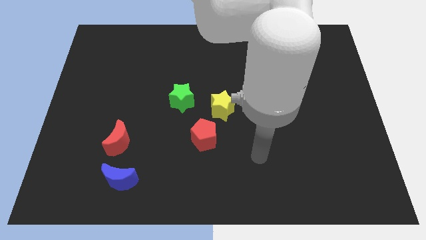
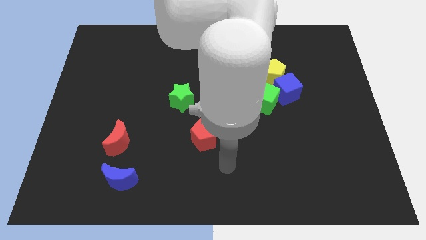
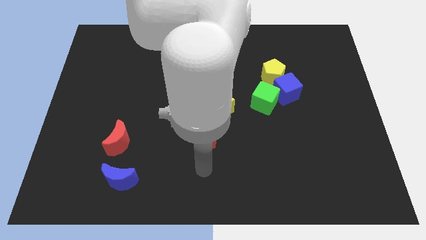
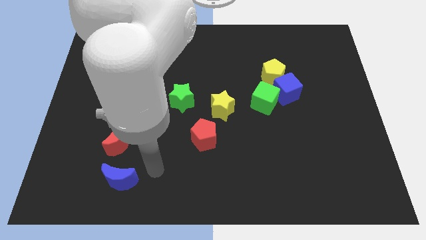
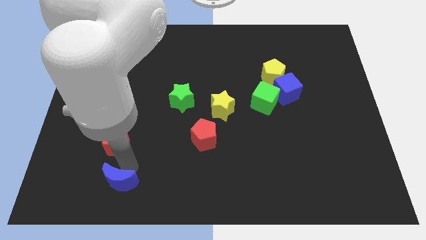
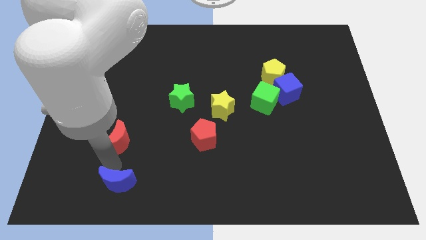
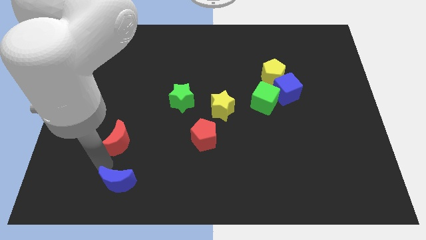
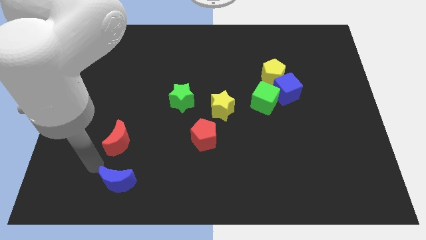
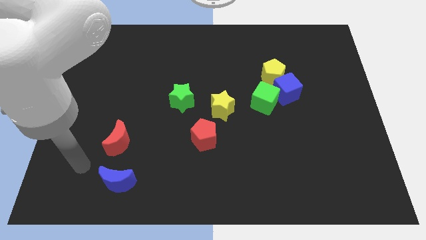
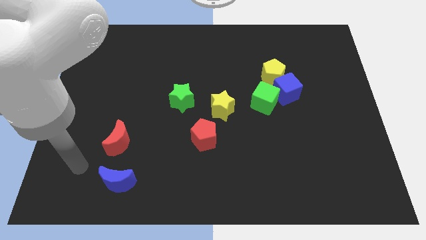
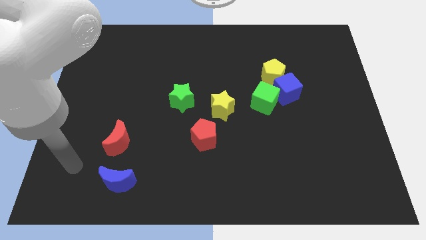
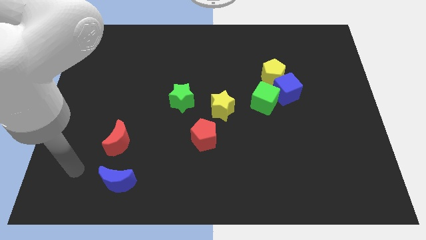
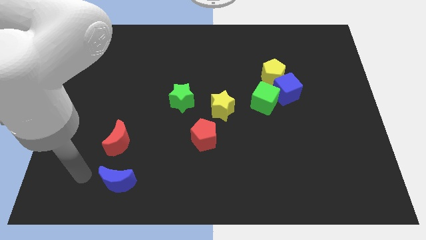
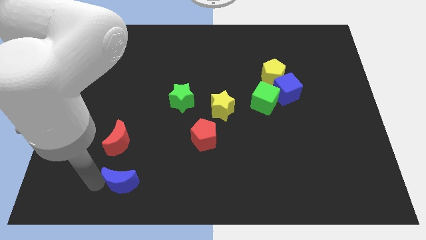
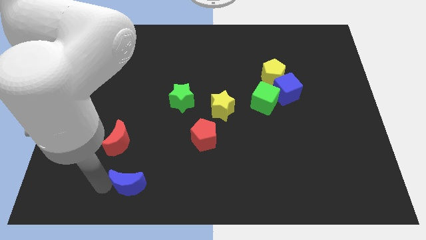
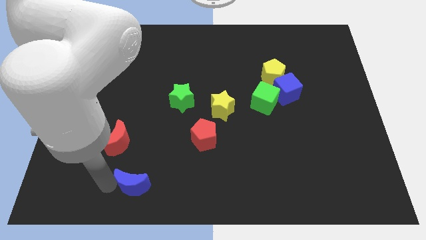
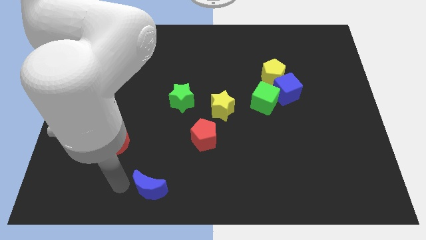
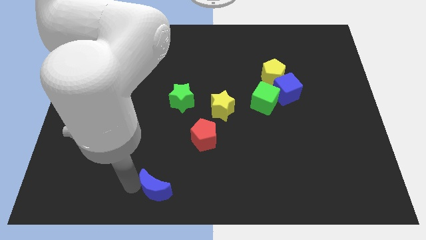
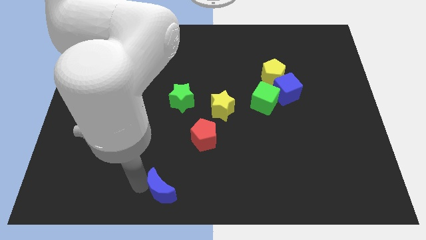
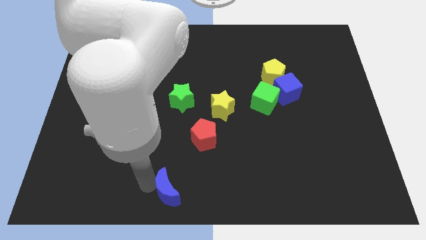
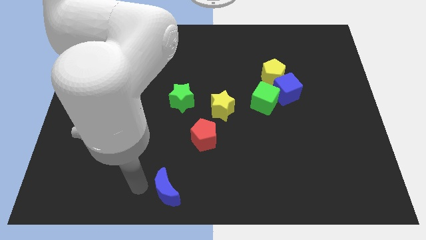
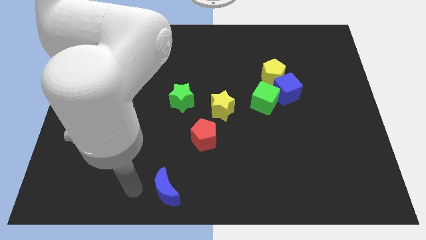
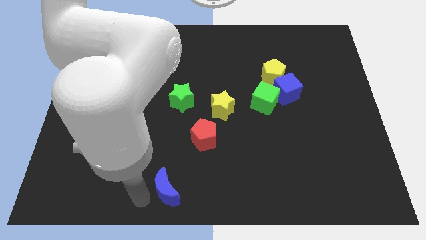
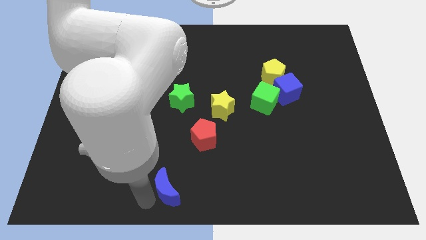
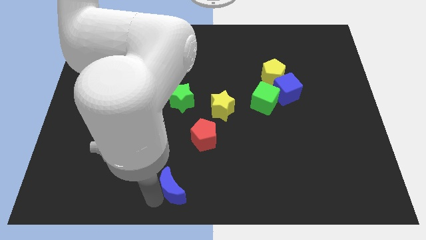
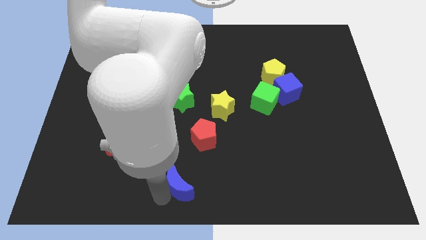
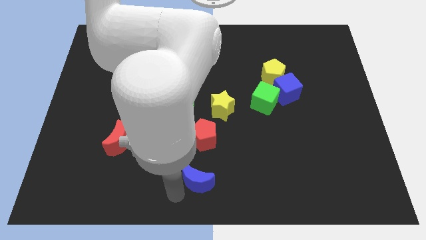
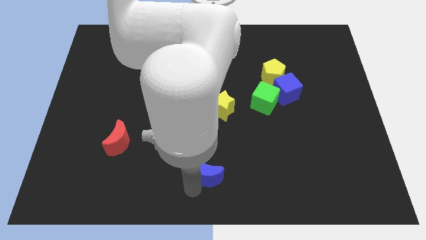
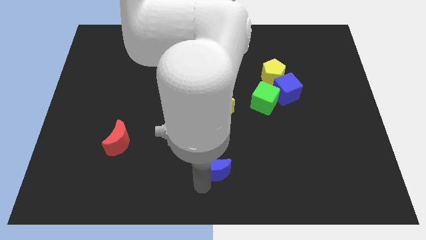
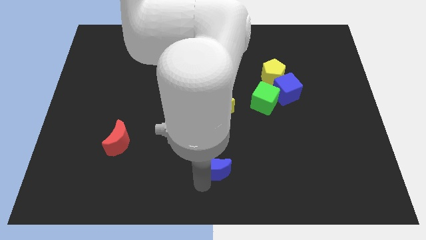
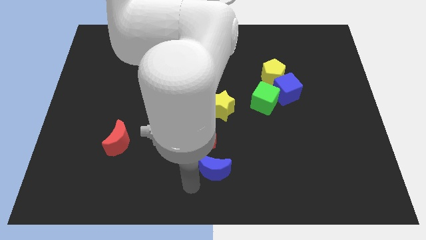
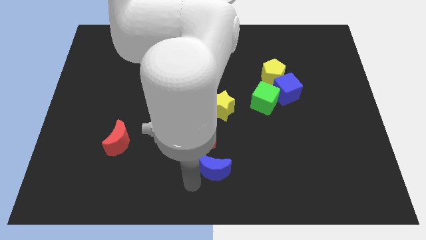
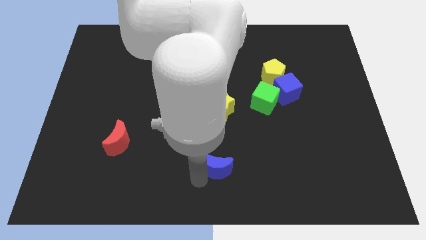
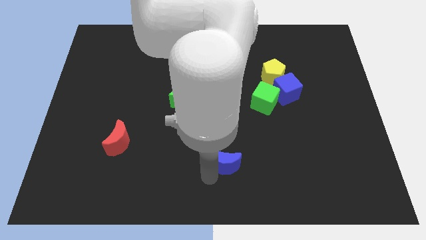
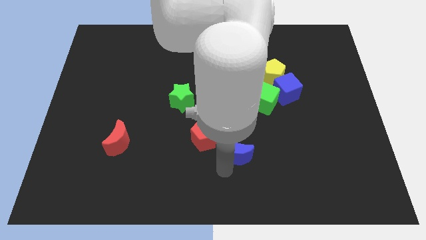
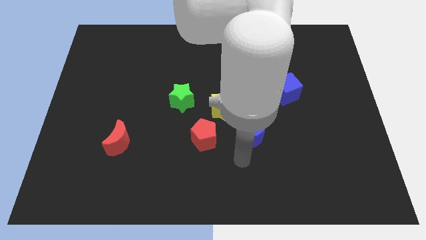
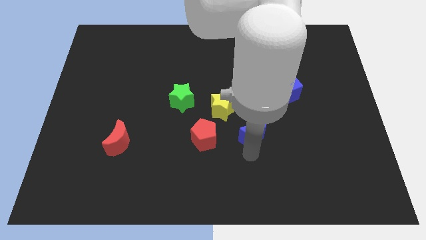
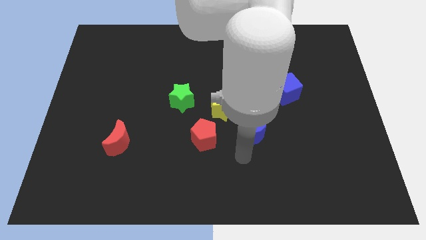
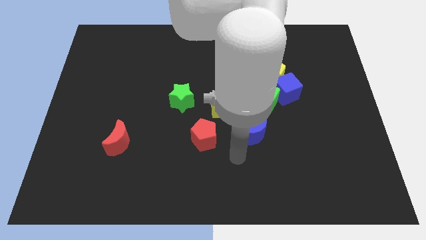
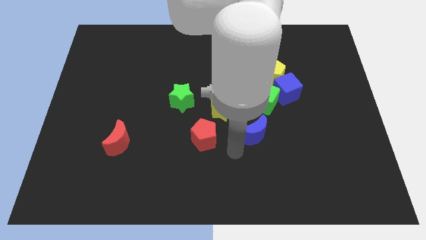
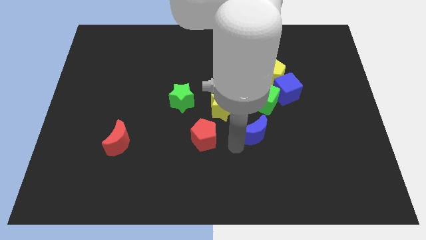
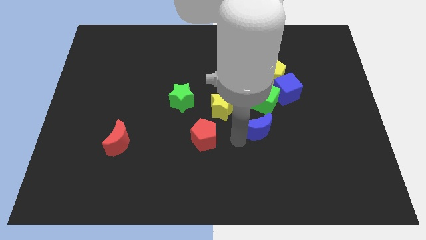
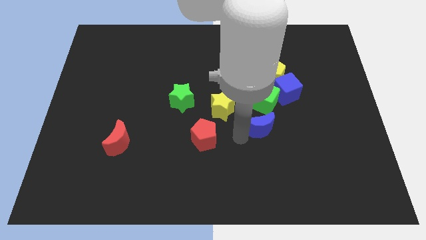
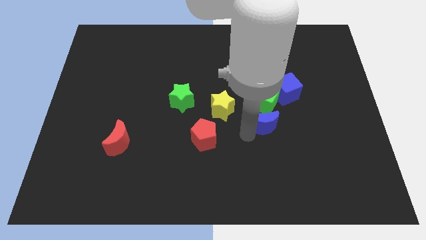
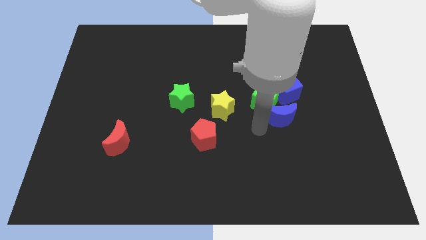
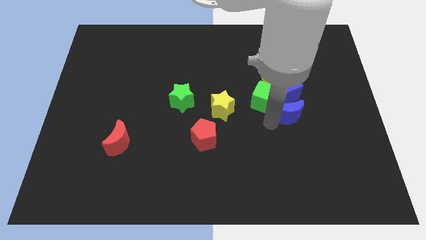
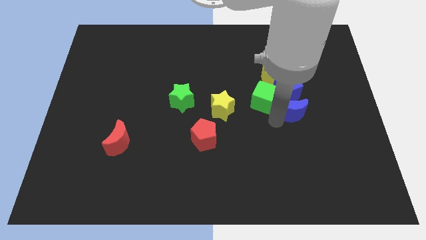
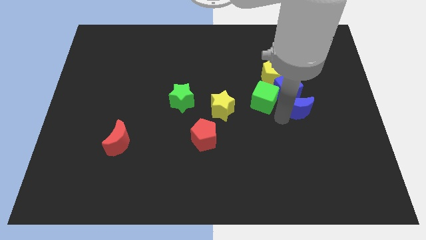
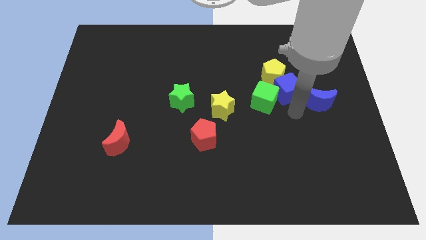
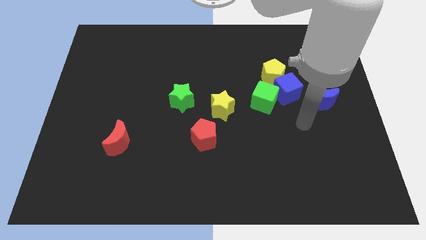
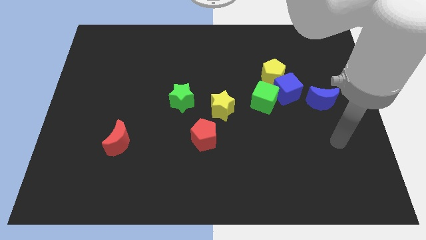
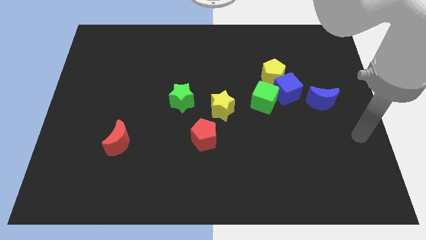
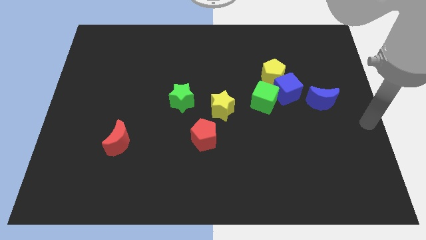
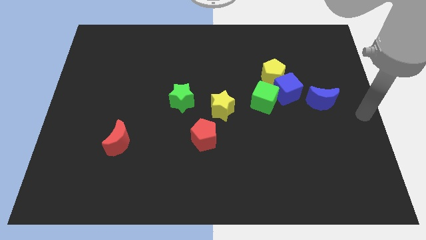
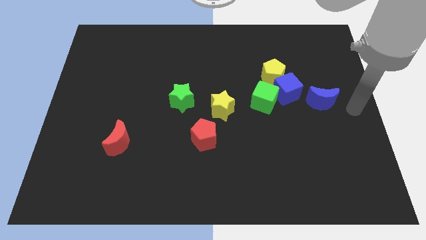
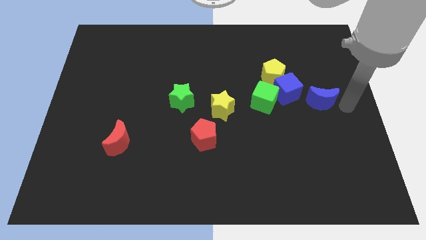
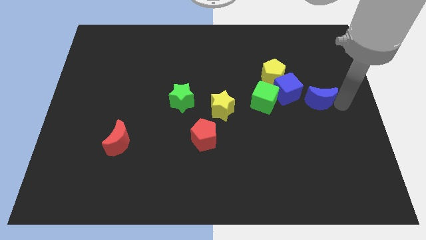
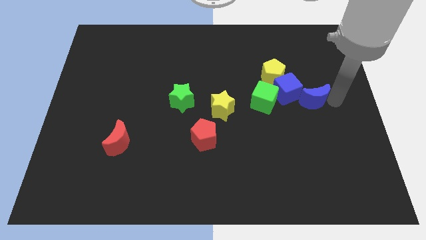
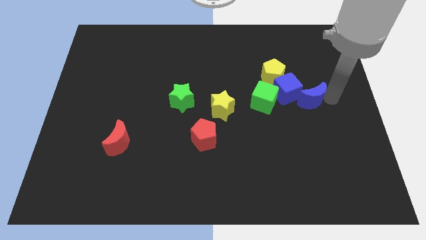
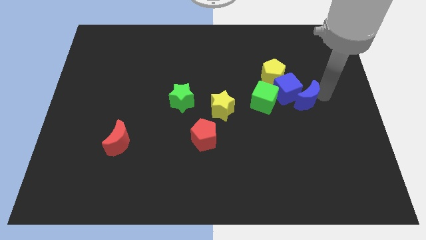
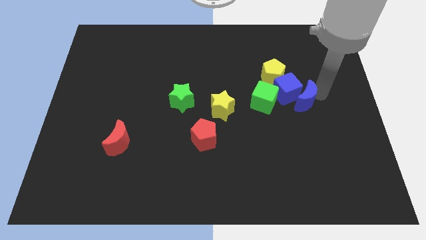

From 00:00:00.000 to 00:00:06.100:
put the blue moon to the blue cube

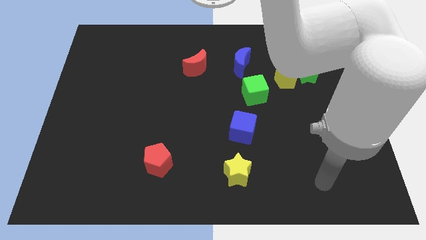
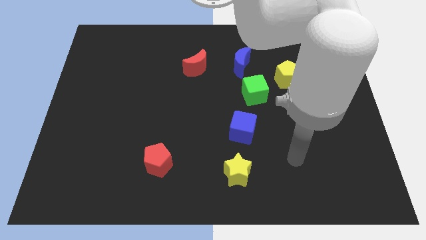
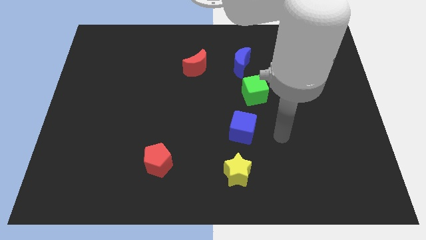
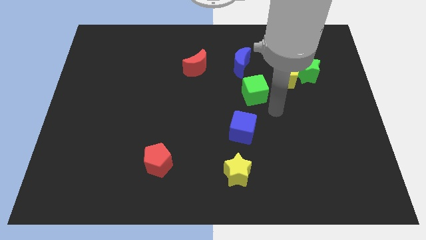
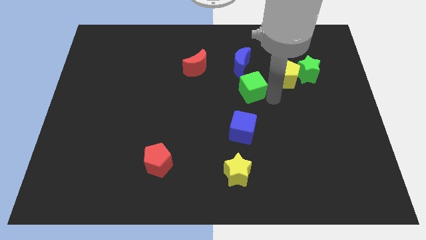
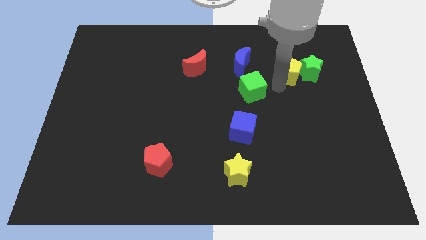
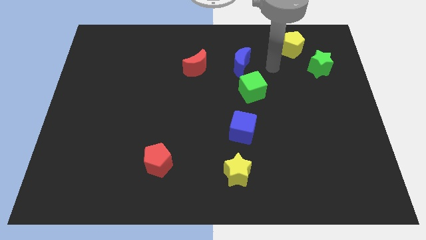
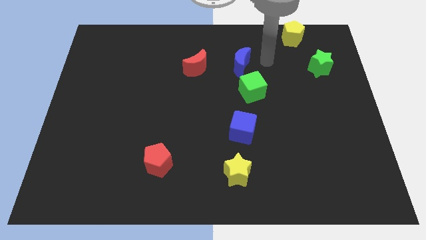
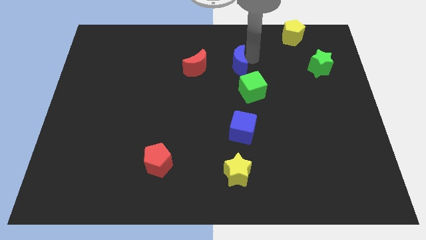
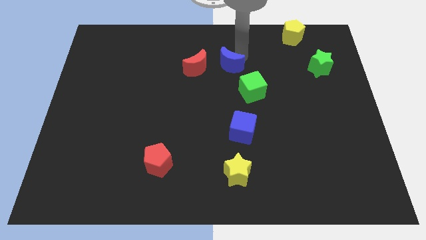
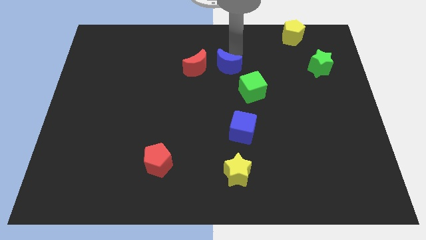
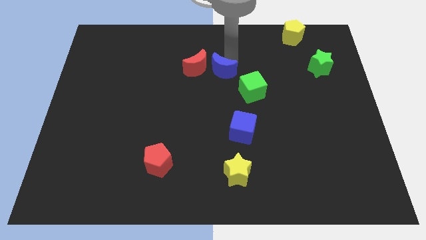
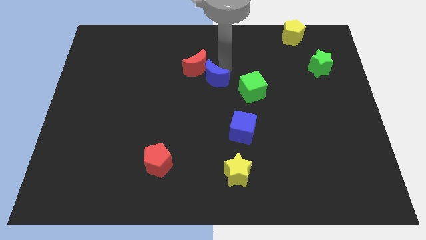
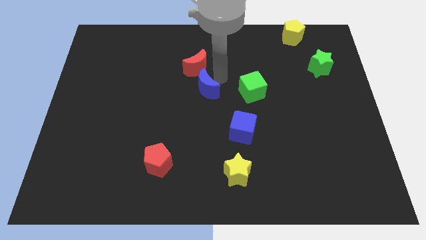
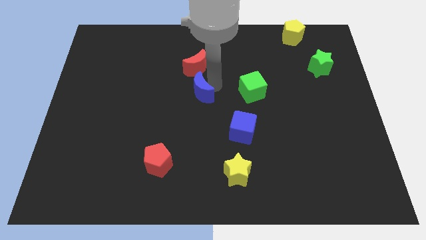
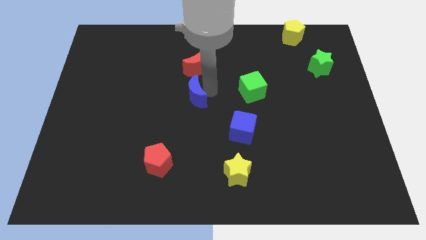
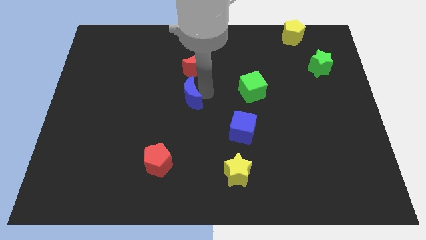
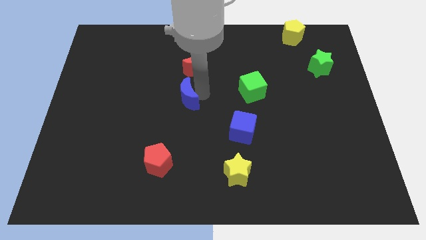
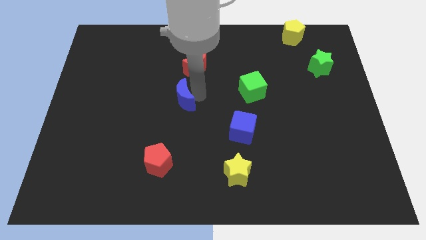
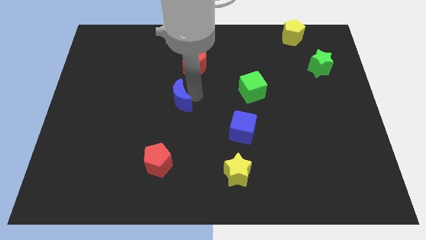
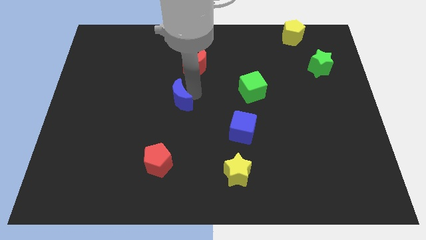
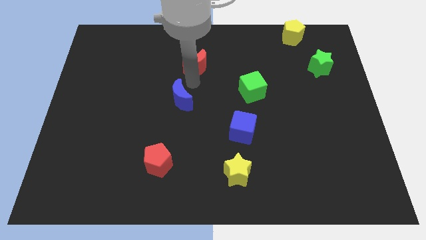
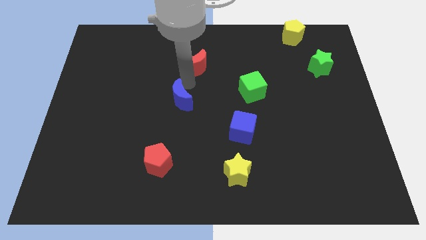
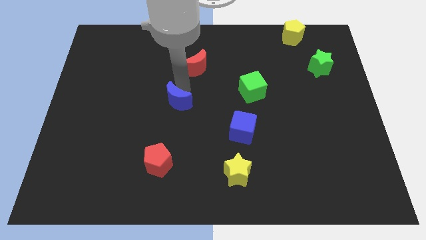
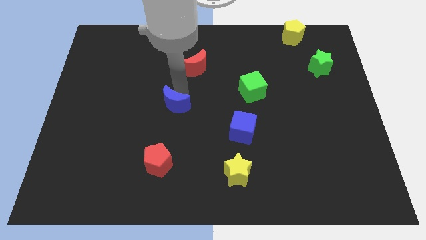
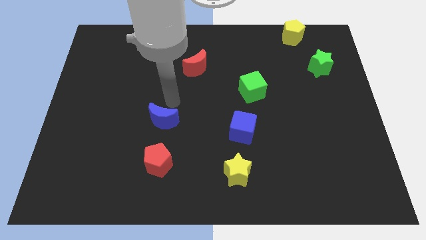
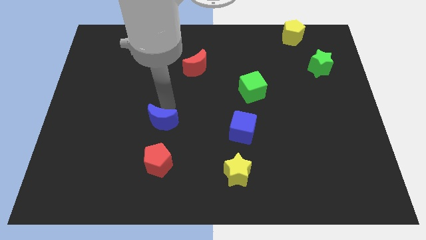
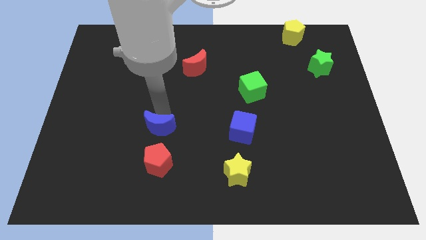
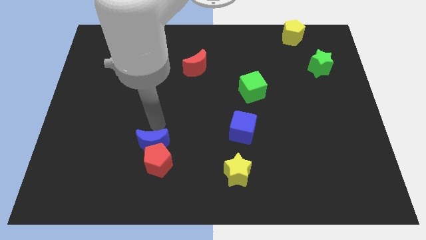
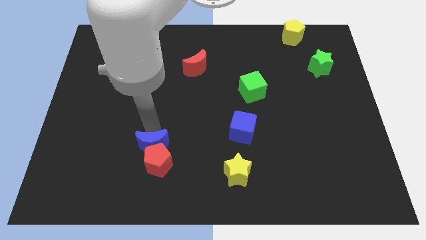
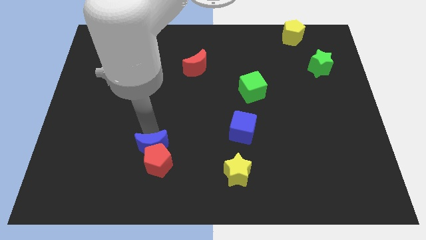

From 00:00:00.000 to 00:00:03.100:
slide the blue moon next to the red pentagon
